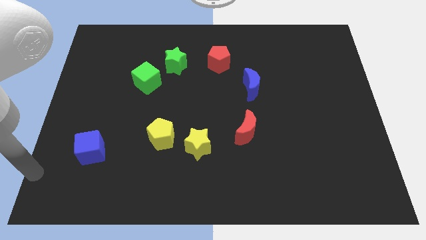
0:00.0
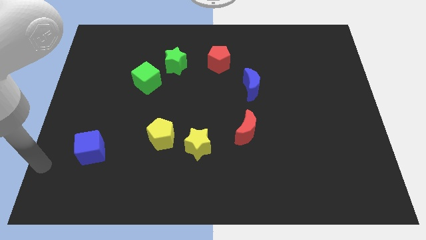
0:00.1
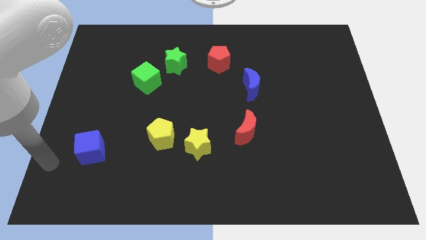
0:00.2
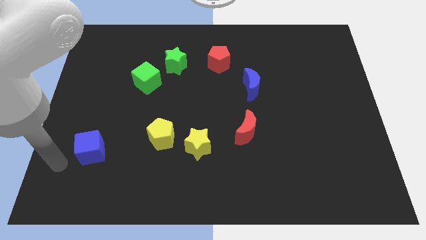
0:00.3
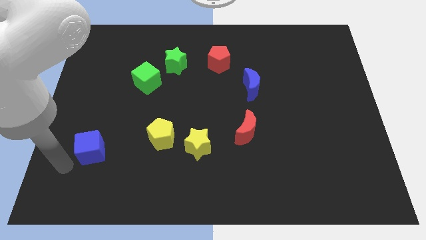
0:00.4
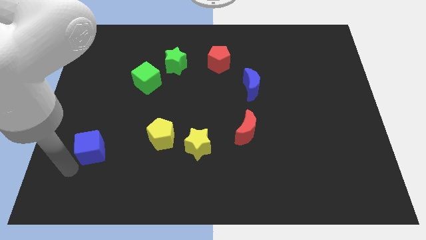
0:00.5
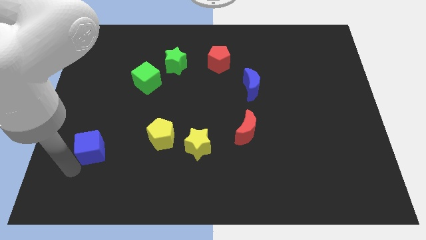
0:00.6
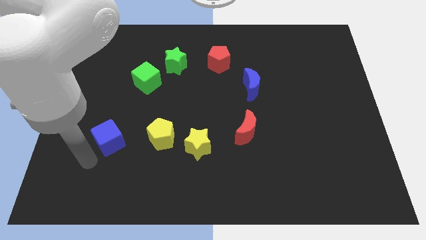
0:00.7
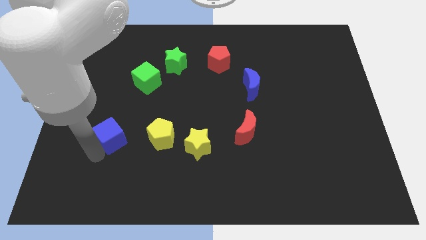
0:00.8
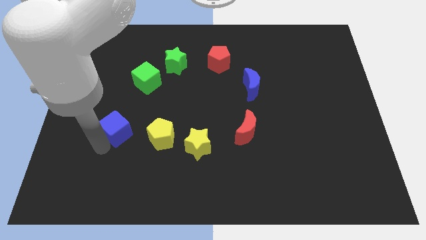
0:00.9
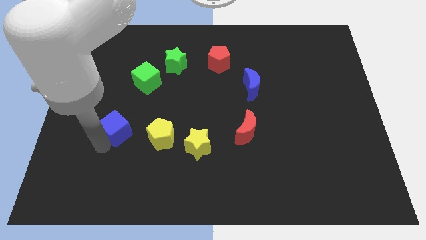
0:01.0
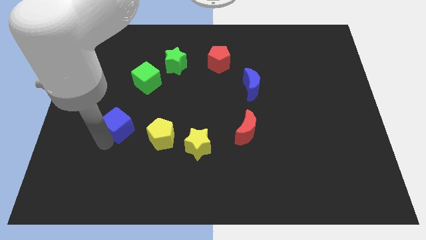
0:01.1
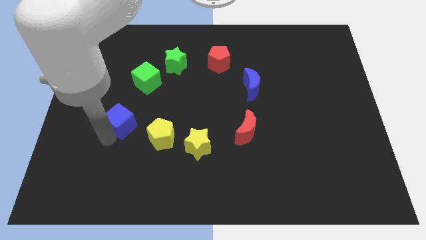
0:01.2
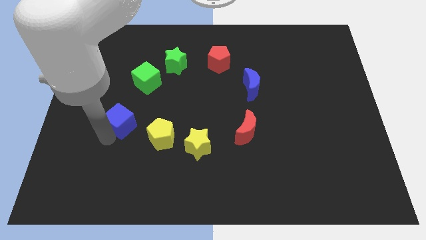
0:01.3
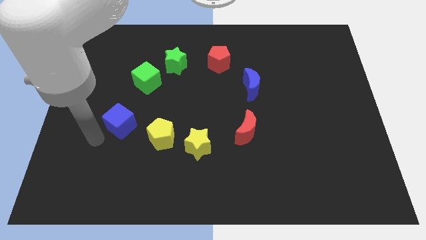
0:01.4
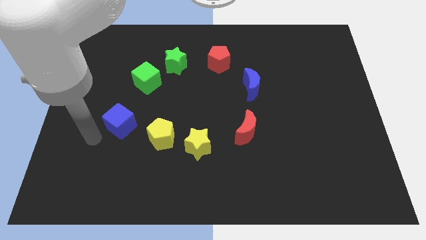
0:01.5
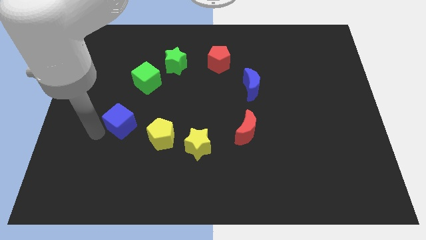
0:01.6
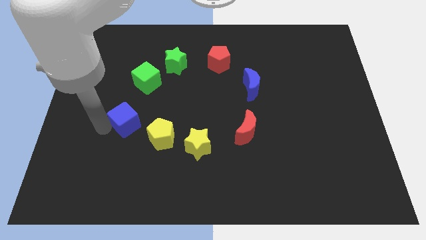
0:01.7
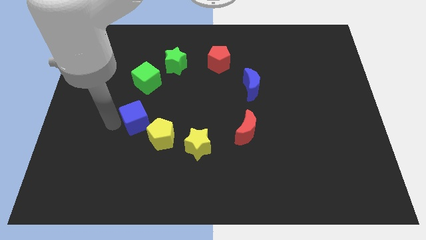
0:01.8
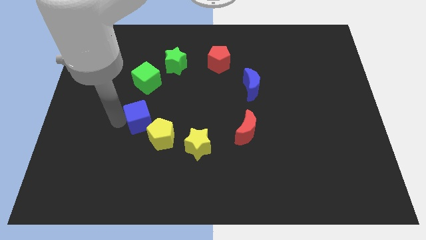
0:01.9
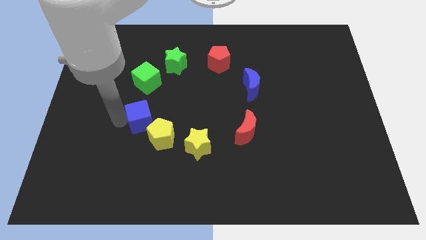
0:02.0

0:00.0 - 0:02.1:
place blue cube in between the green cube and the yellow pentagon

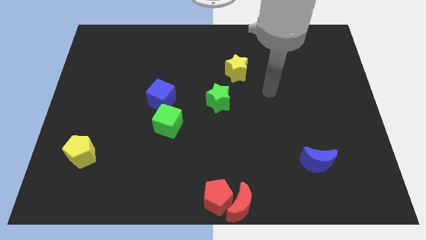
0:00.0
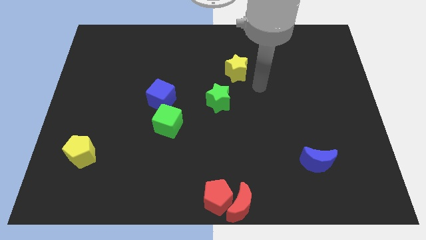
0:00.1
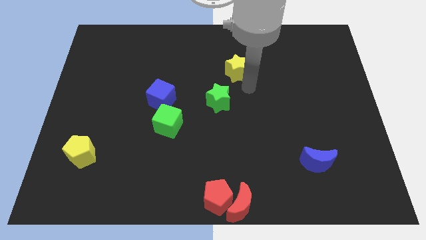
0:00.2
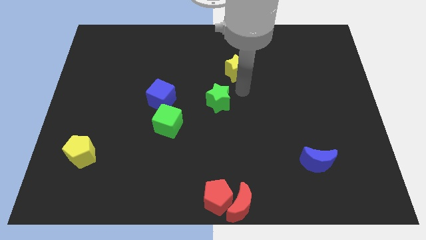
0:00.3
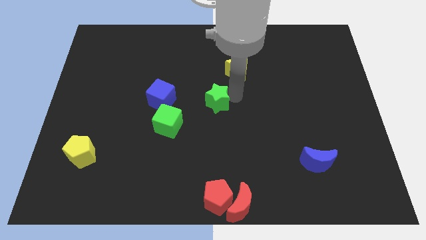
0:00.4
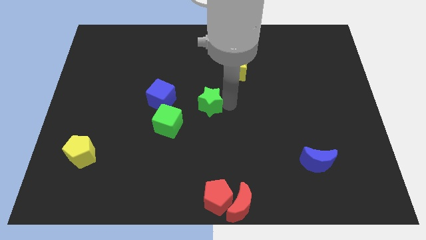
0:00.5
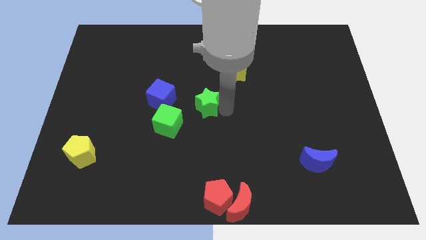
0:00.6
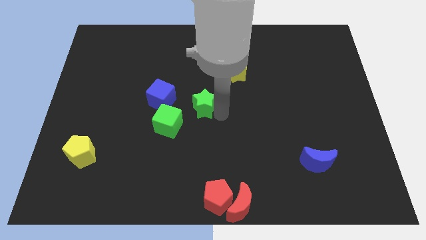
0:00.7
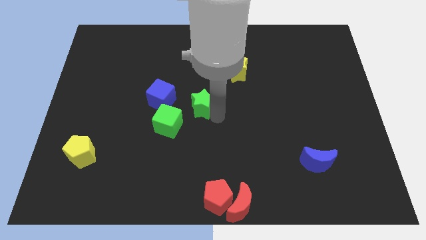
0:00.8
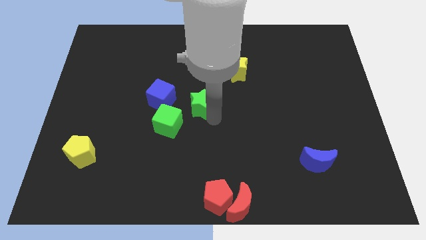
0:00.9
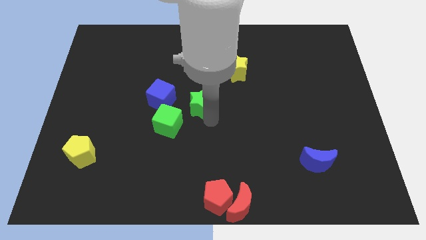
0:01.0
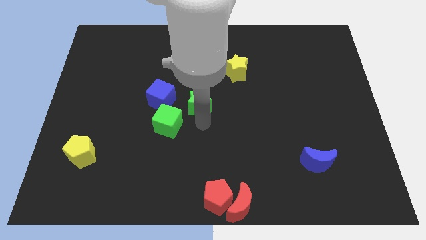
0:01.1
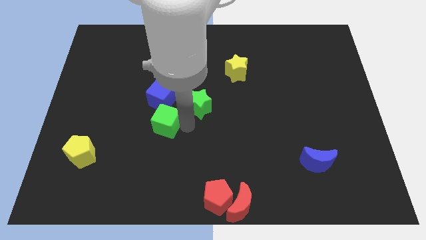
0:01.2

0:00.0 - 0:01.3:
move the green star to the top right of the green cube

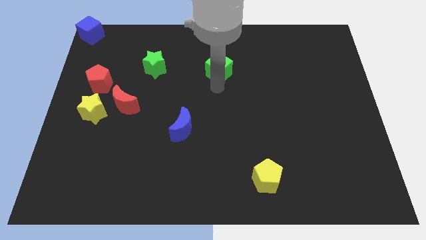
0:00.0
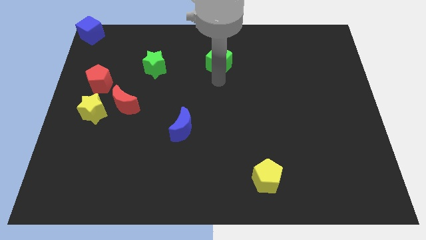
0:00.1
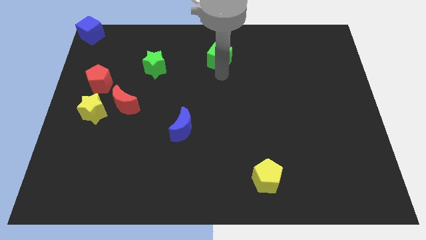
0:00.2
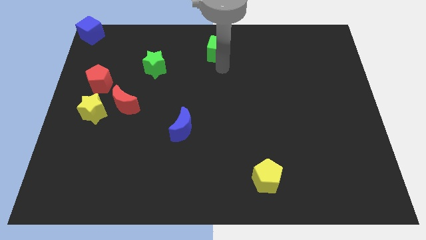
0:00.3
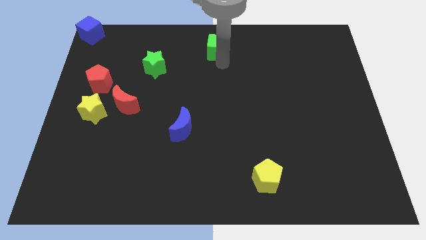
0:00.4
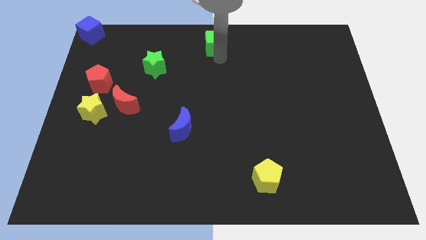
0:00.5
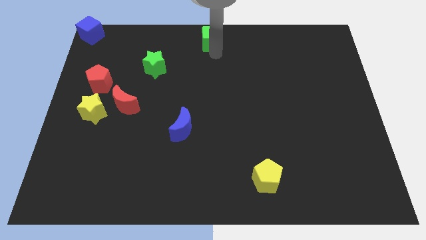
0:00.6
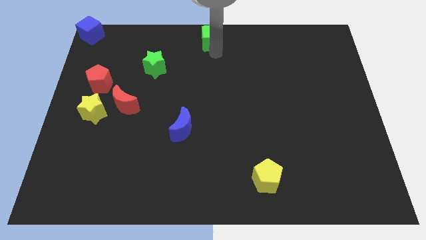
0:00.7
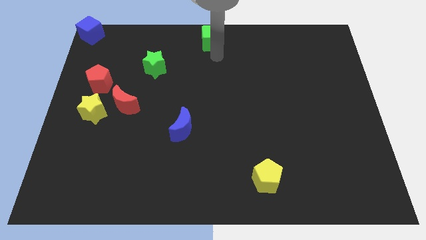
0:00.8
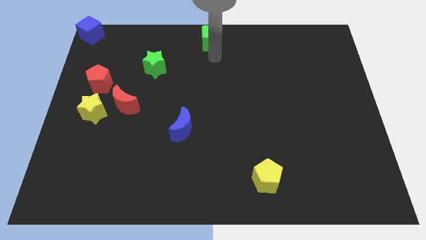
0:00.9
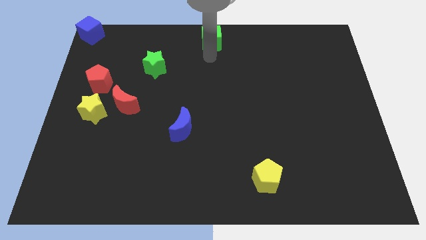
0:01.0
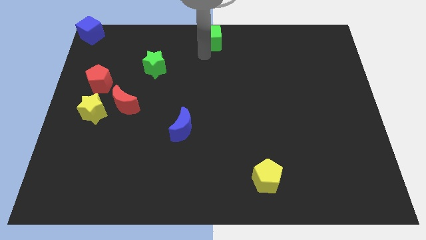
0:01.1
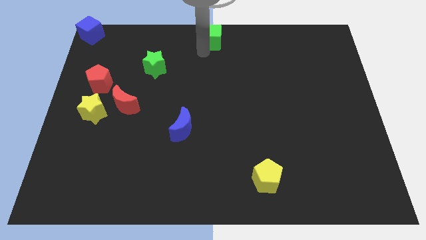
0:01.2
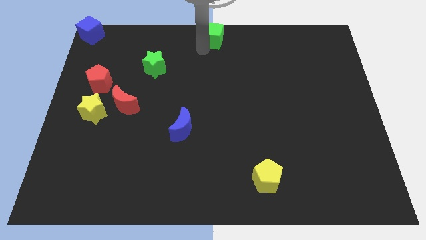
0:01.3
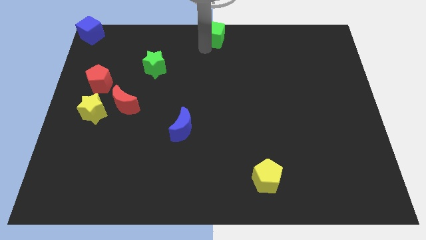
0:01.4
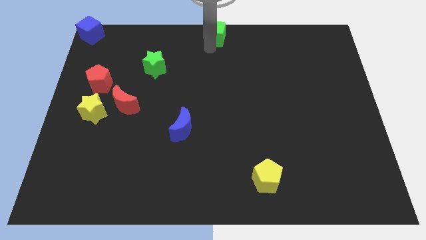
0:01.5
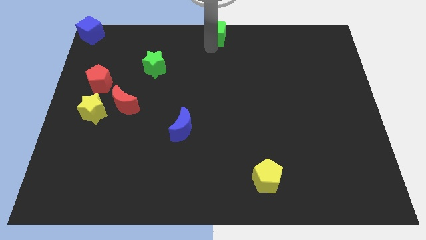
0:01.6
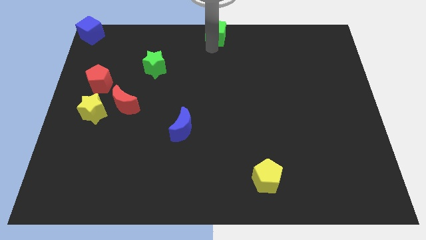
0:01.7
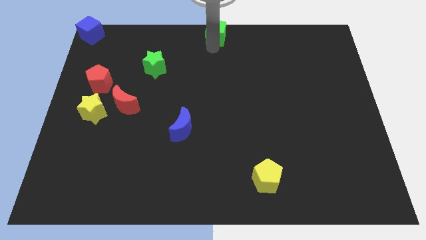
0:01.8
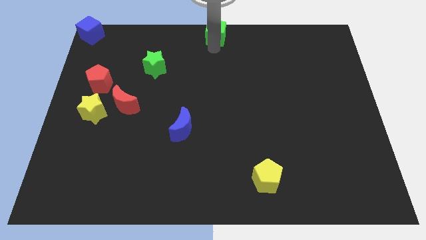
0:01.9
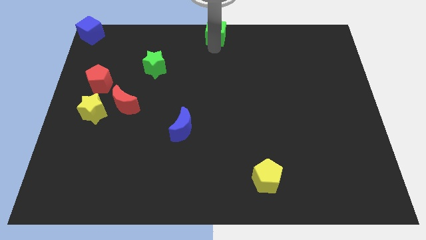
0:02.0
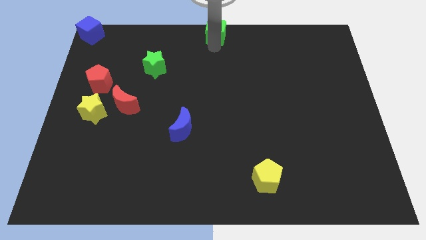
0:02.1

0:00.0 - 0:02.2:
move the green cube to the top center of the board

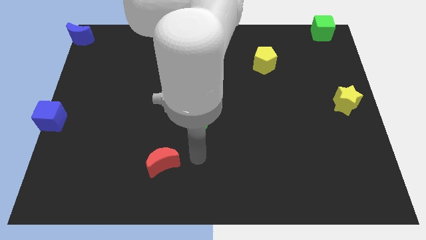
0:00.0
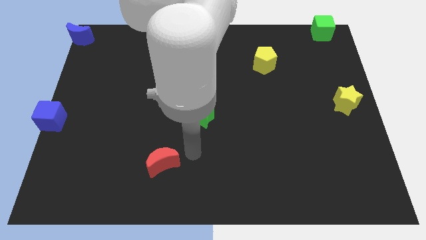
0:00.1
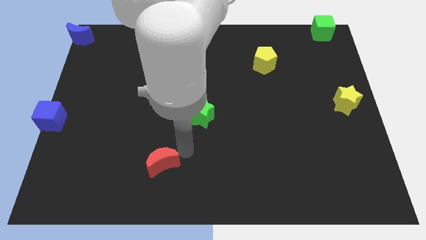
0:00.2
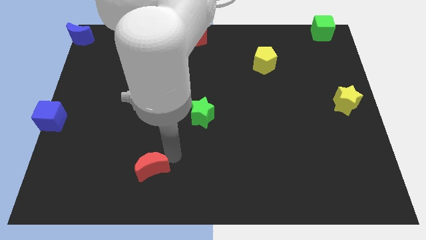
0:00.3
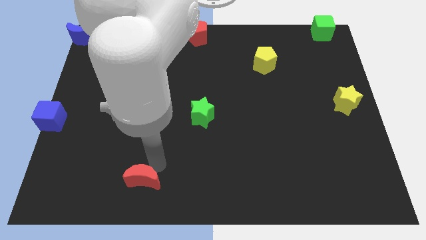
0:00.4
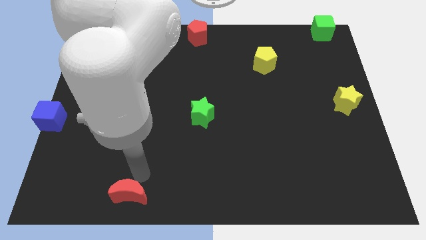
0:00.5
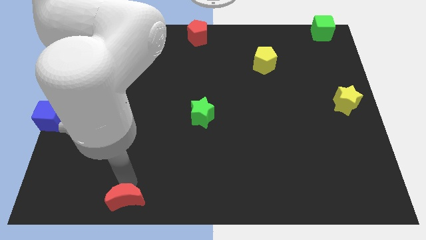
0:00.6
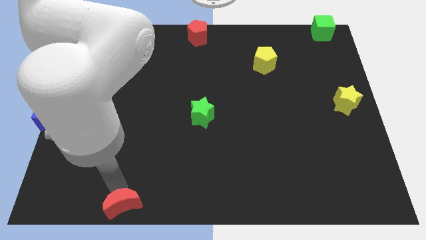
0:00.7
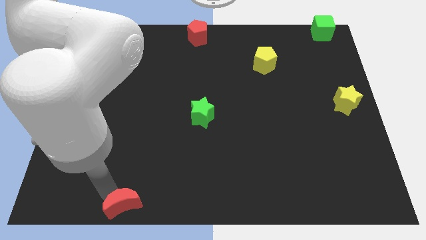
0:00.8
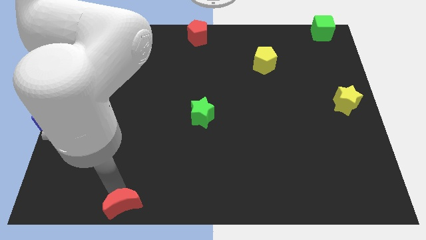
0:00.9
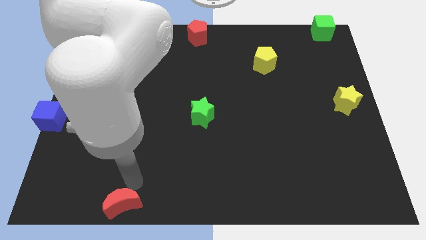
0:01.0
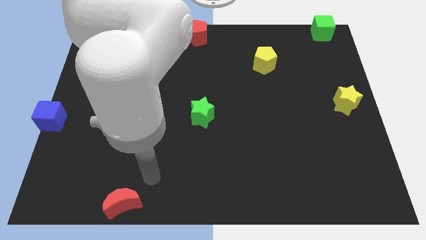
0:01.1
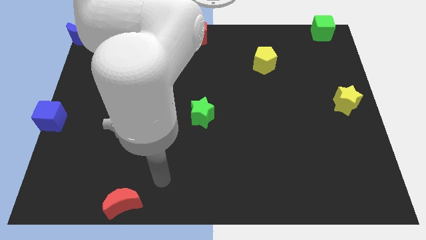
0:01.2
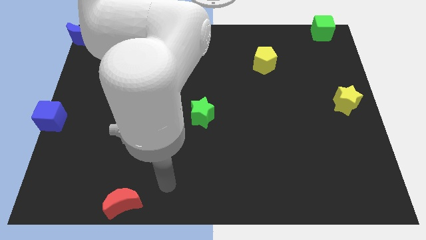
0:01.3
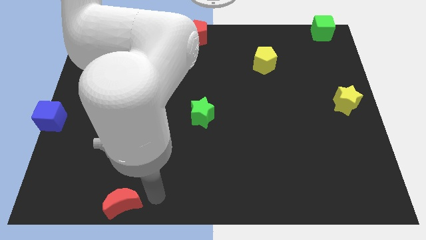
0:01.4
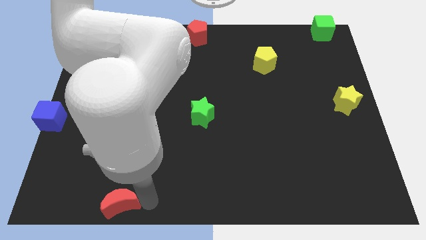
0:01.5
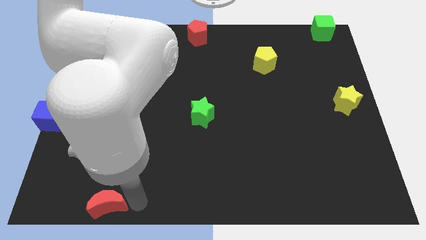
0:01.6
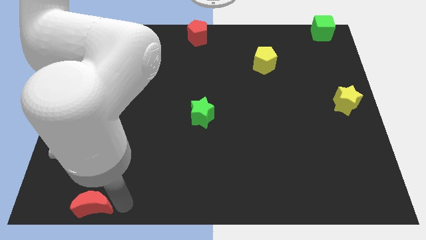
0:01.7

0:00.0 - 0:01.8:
push the red moon towards the bottom left

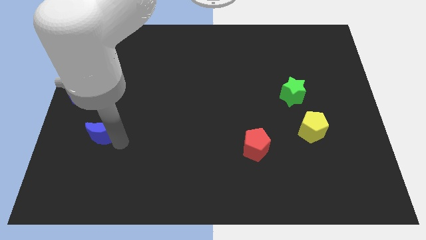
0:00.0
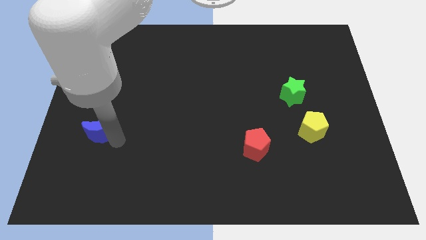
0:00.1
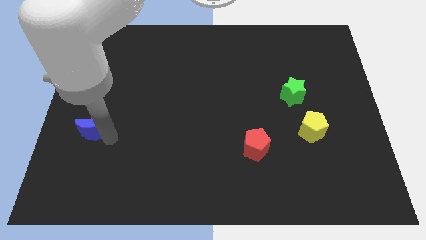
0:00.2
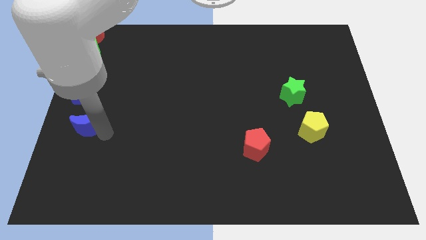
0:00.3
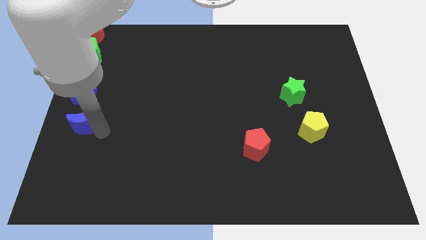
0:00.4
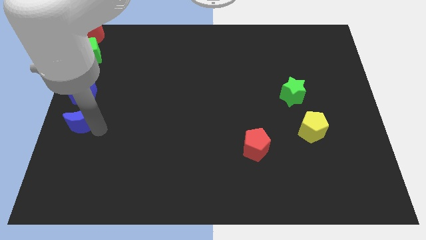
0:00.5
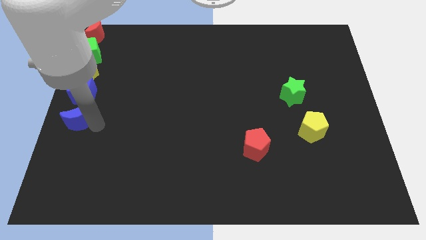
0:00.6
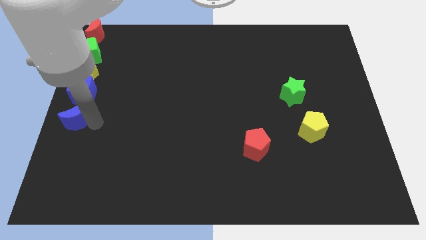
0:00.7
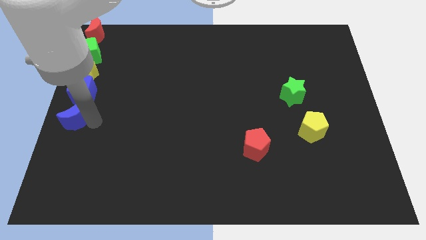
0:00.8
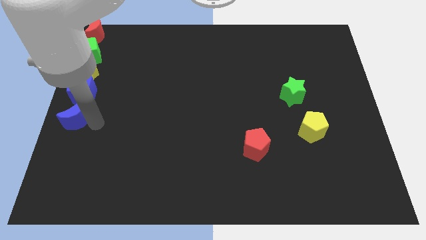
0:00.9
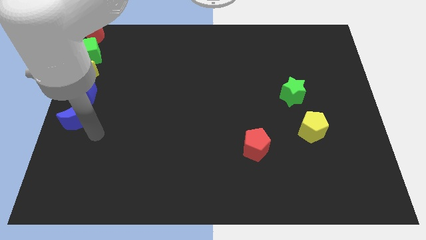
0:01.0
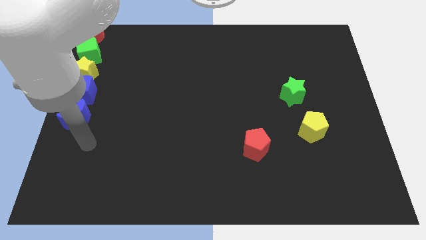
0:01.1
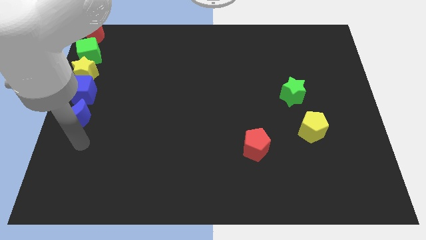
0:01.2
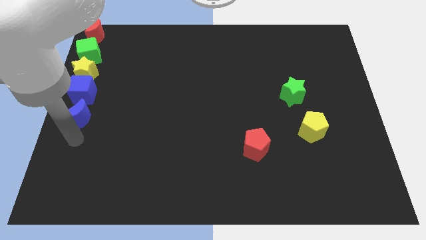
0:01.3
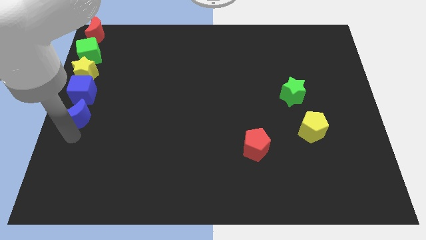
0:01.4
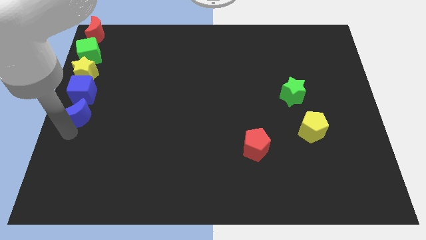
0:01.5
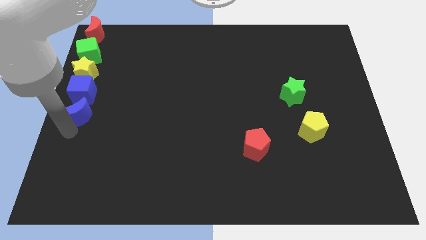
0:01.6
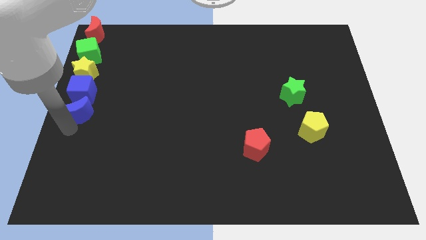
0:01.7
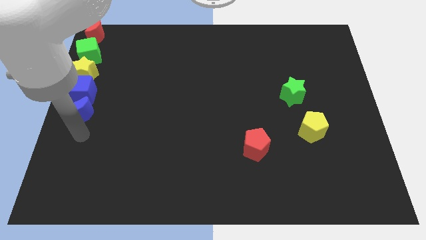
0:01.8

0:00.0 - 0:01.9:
push the blue moon close to the blue cube
